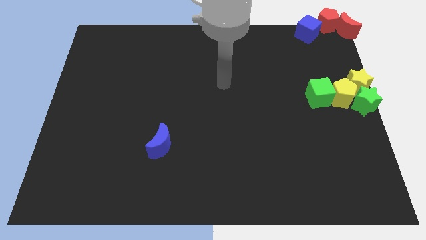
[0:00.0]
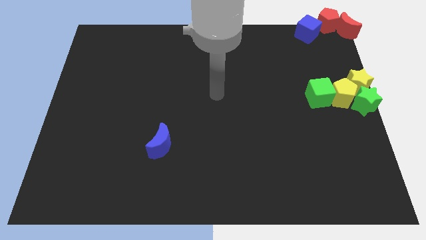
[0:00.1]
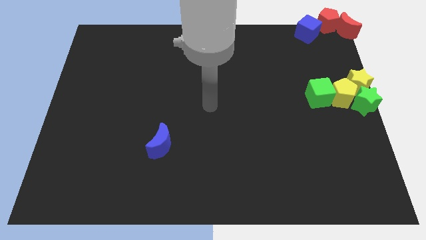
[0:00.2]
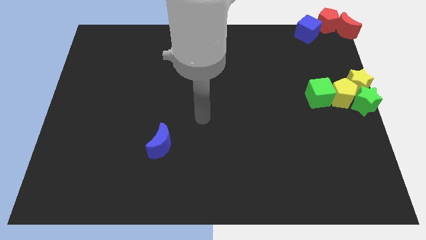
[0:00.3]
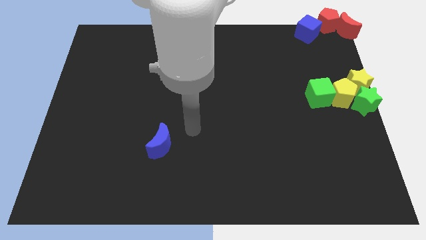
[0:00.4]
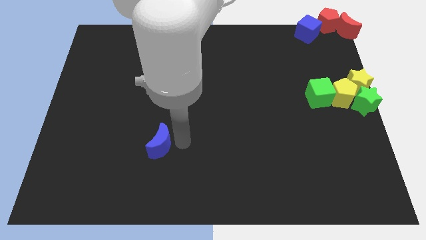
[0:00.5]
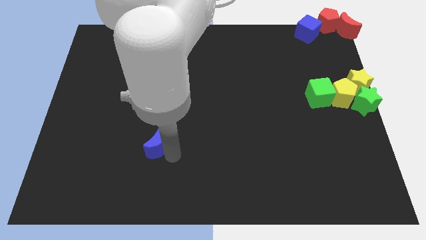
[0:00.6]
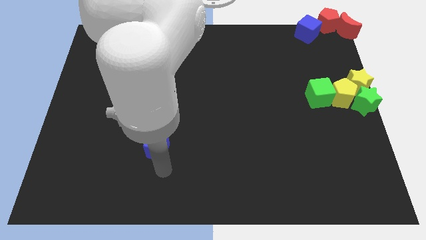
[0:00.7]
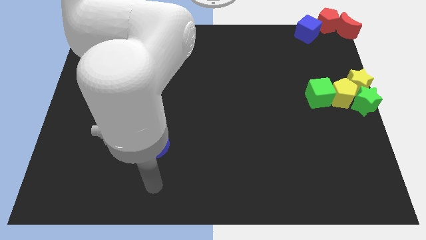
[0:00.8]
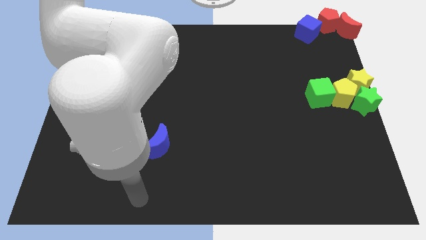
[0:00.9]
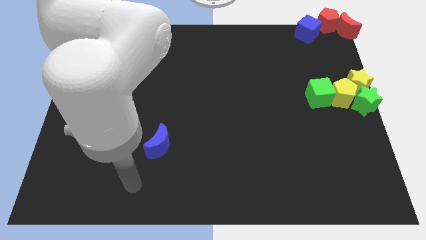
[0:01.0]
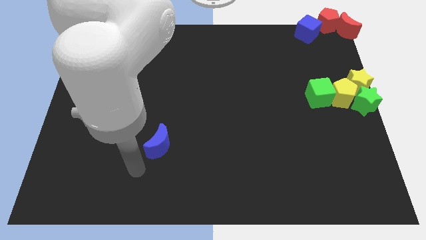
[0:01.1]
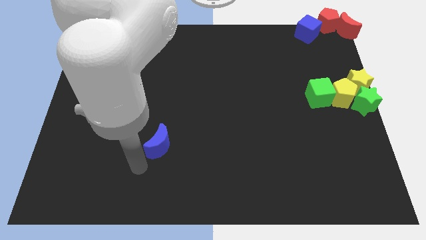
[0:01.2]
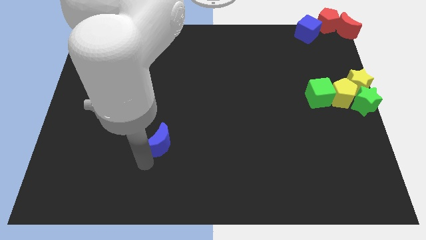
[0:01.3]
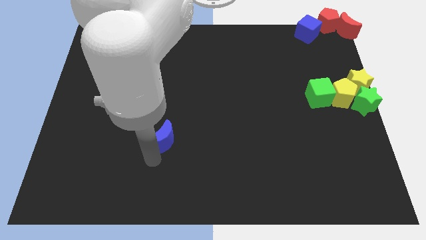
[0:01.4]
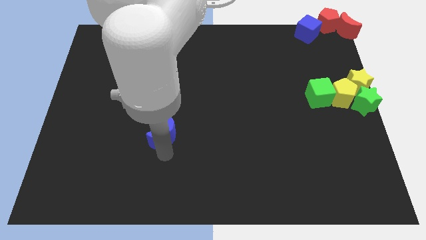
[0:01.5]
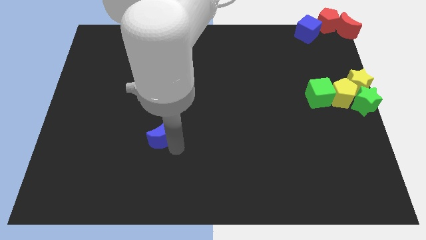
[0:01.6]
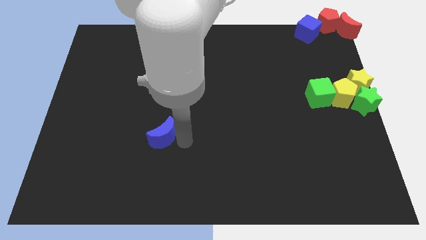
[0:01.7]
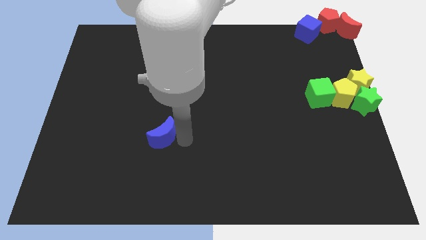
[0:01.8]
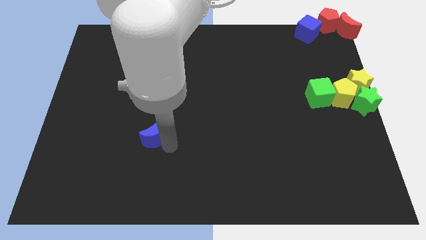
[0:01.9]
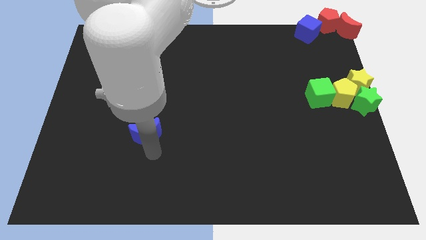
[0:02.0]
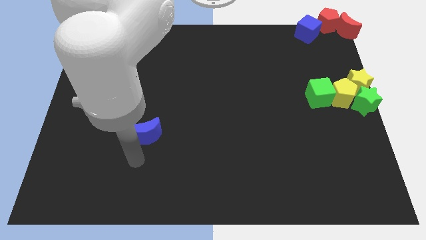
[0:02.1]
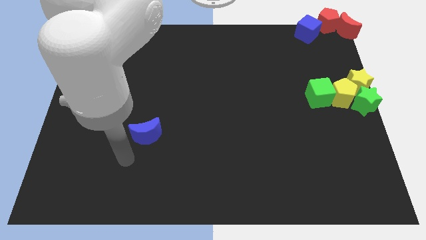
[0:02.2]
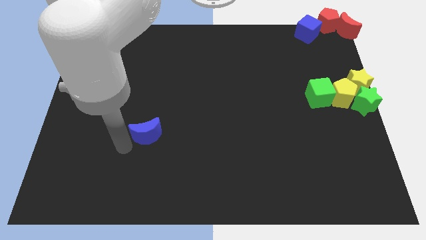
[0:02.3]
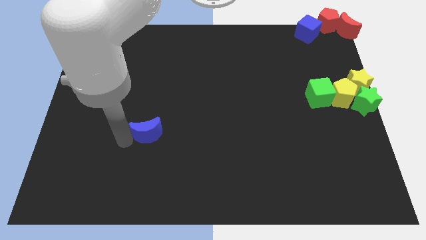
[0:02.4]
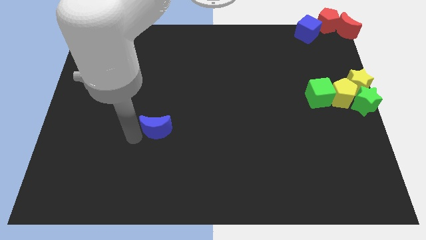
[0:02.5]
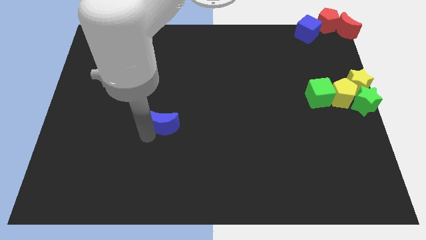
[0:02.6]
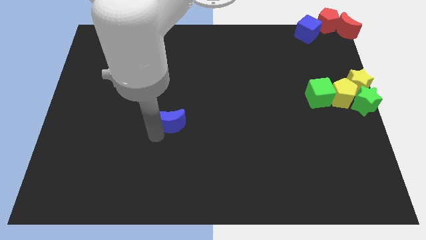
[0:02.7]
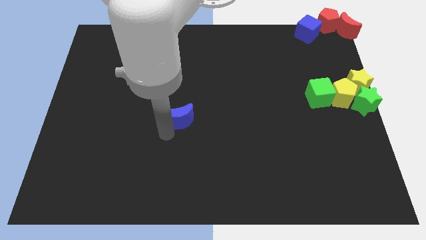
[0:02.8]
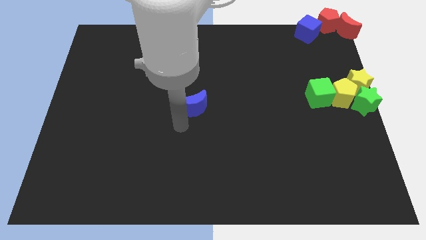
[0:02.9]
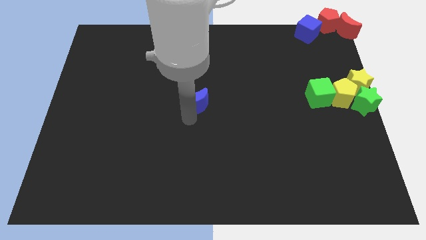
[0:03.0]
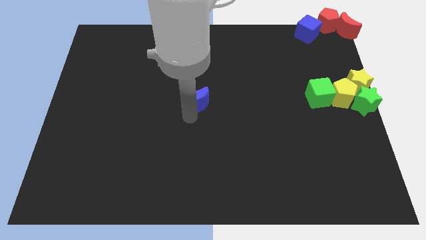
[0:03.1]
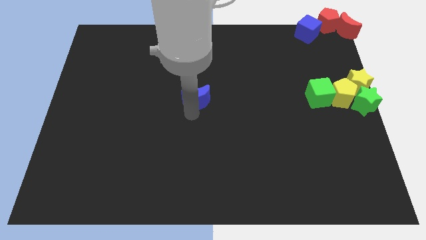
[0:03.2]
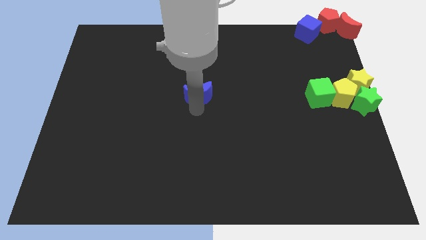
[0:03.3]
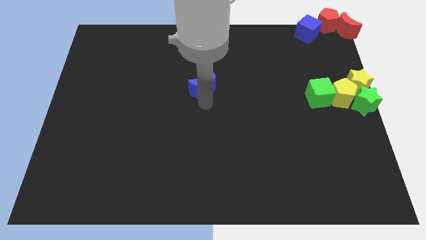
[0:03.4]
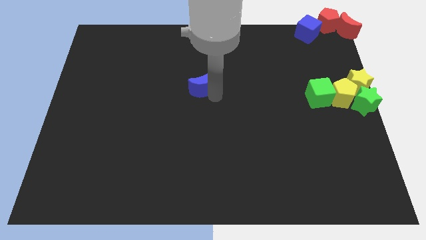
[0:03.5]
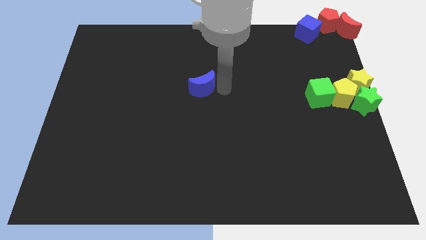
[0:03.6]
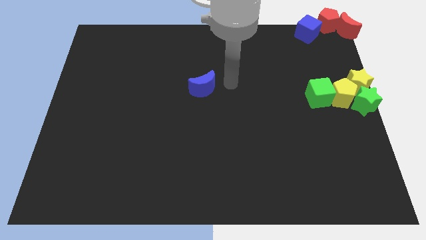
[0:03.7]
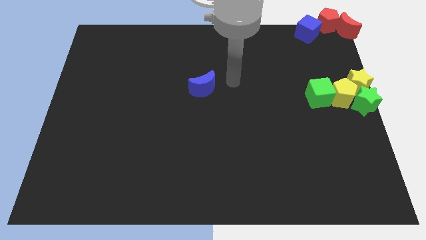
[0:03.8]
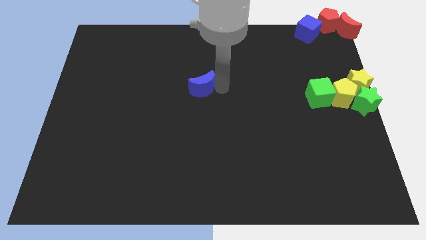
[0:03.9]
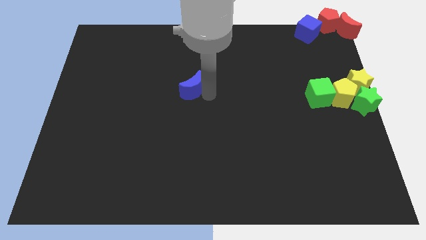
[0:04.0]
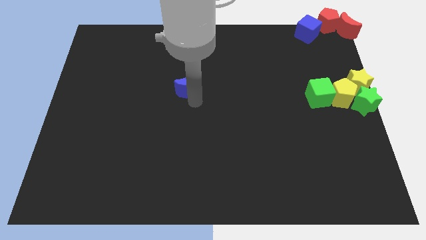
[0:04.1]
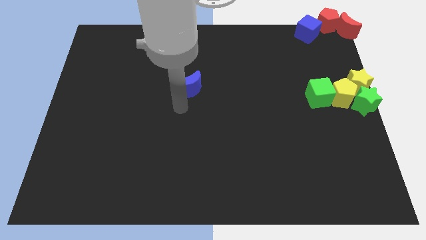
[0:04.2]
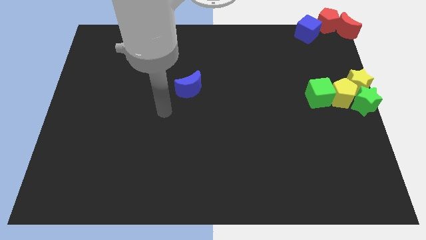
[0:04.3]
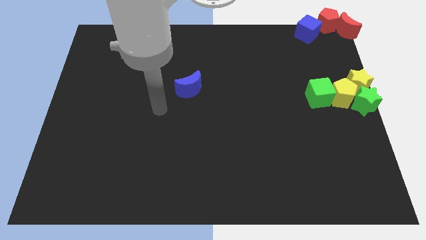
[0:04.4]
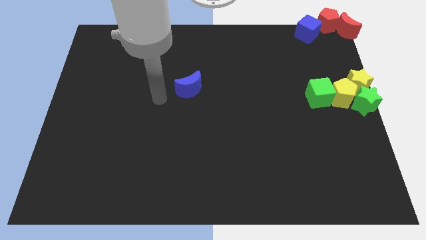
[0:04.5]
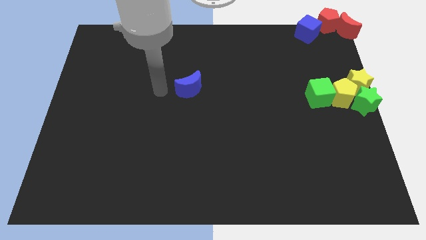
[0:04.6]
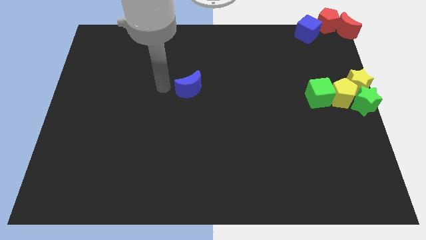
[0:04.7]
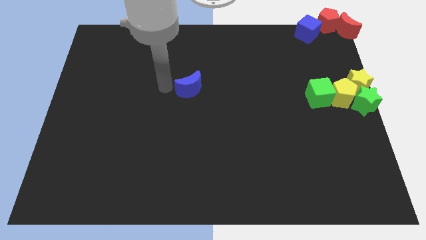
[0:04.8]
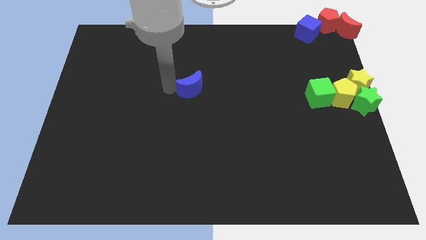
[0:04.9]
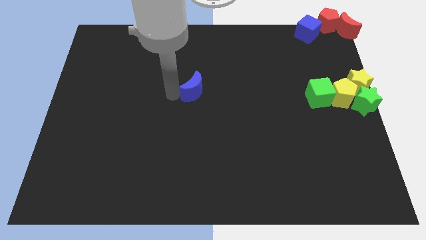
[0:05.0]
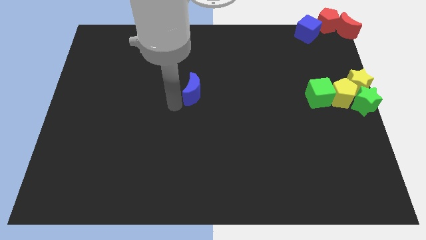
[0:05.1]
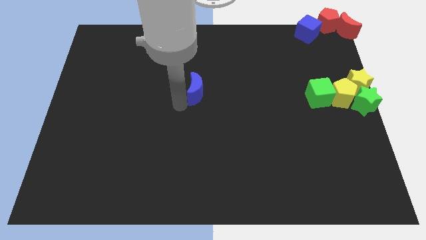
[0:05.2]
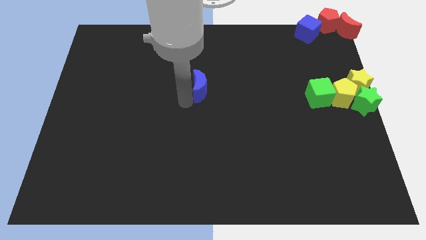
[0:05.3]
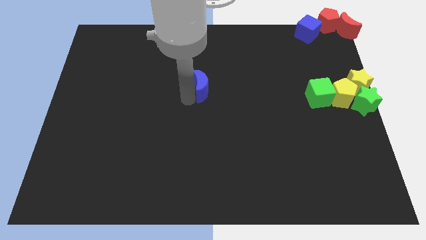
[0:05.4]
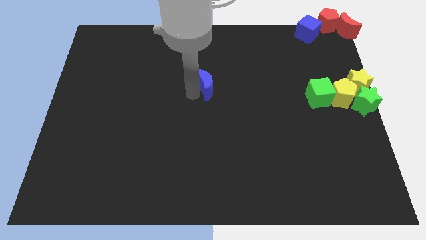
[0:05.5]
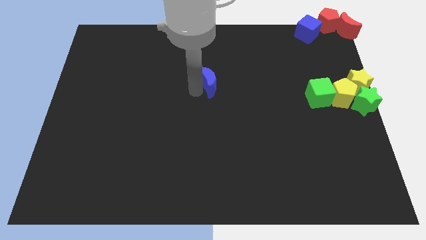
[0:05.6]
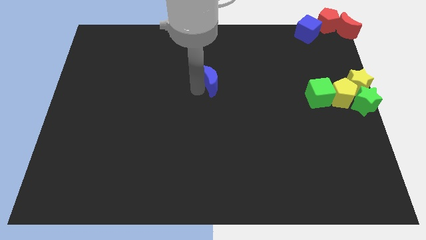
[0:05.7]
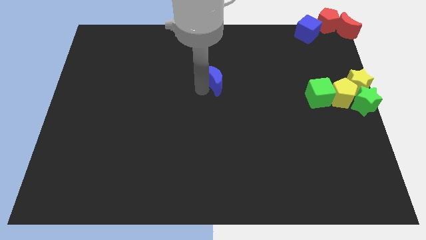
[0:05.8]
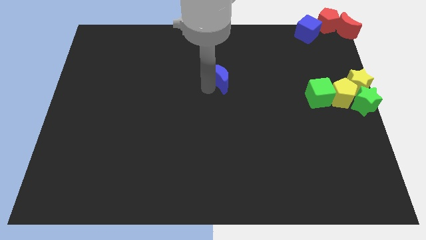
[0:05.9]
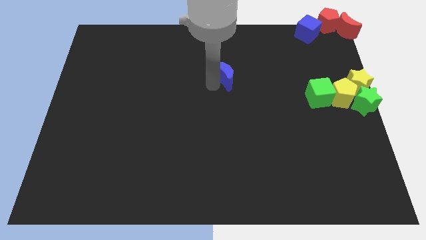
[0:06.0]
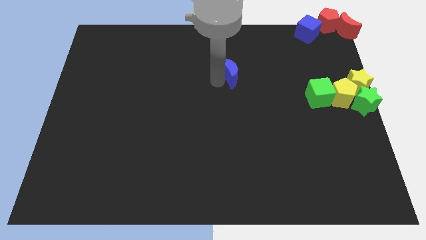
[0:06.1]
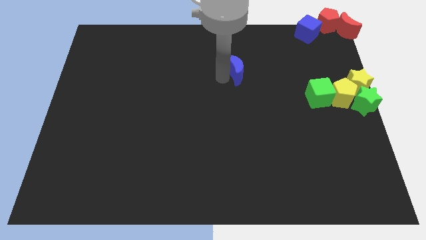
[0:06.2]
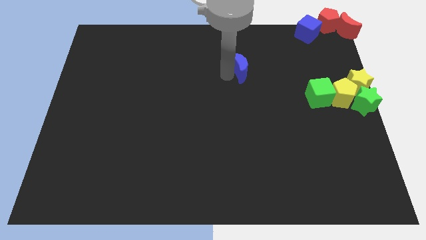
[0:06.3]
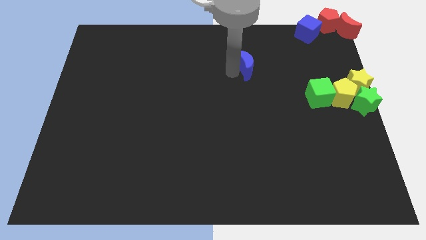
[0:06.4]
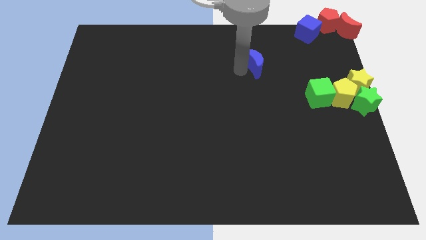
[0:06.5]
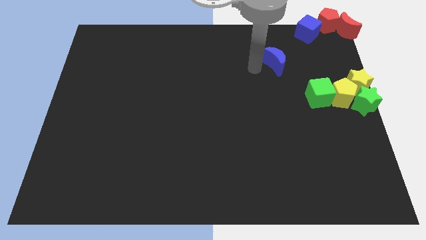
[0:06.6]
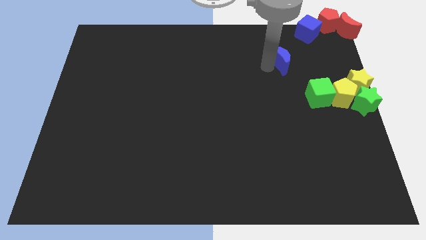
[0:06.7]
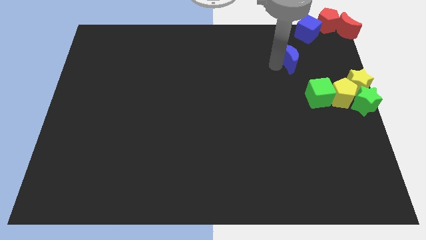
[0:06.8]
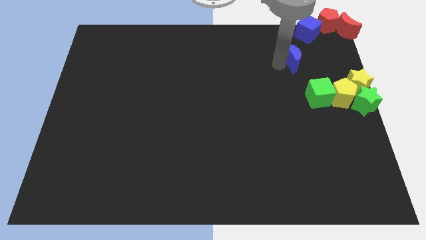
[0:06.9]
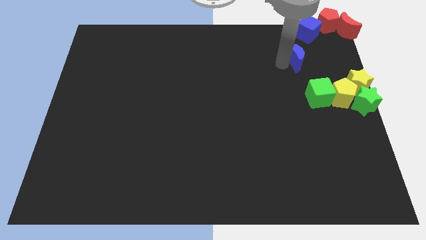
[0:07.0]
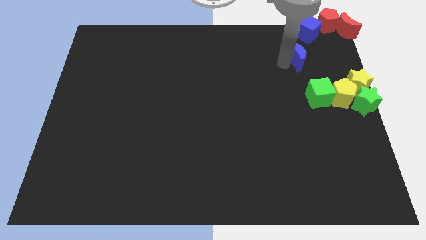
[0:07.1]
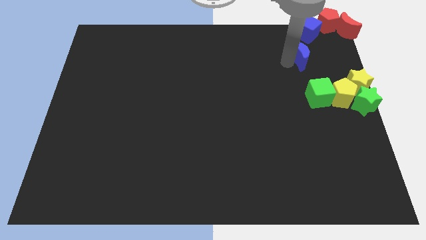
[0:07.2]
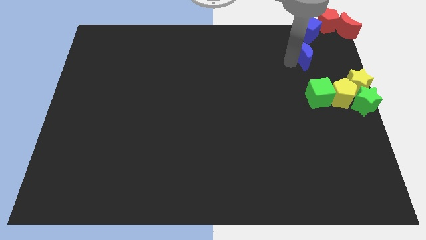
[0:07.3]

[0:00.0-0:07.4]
move the blue moon to the top right corner

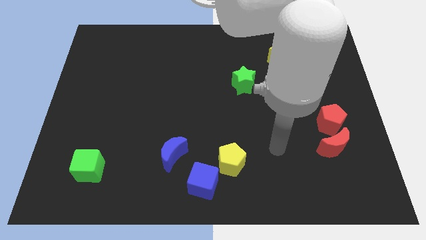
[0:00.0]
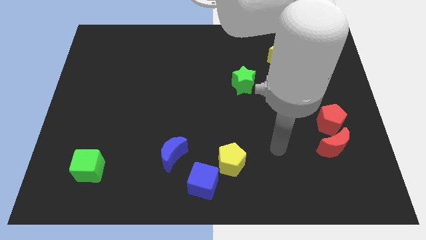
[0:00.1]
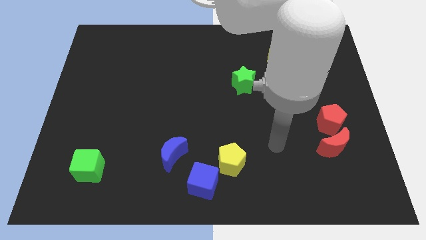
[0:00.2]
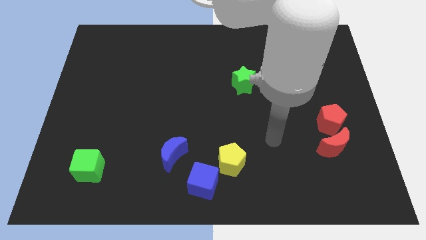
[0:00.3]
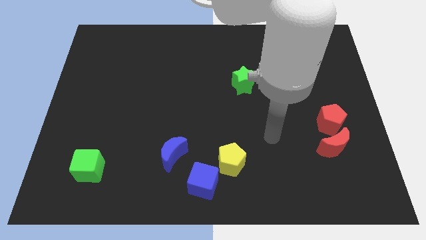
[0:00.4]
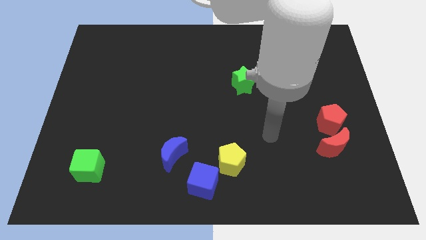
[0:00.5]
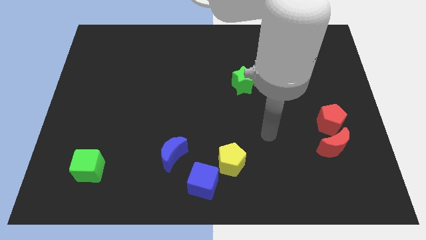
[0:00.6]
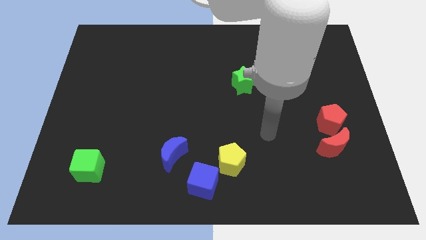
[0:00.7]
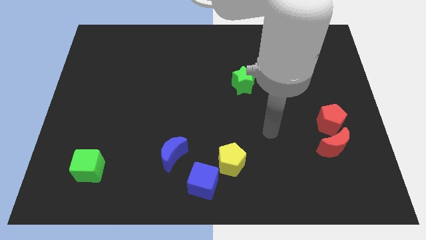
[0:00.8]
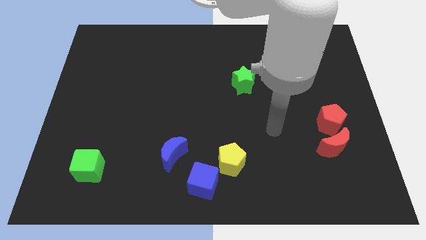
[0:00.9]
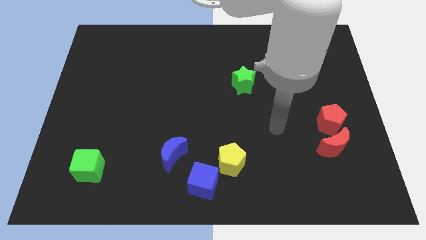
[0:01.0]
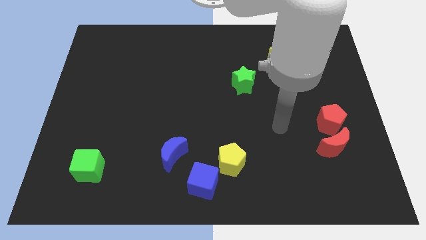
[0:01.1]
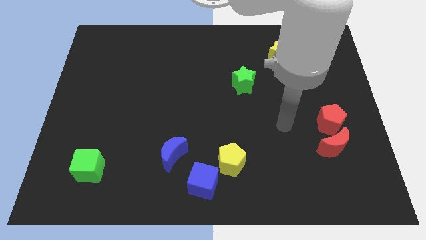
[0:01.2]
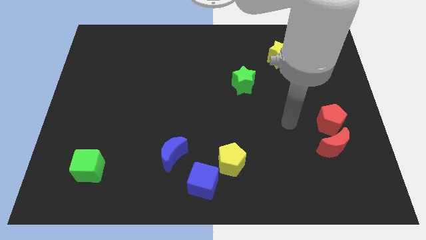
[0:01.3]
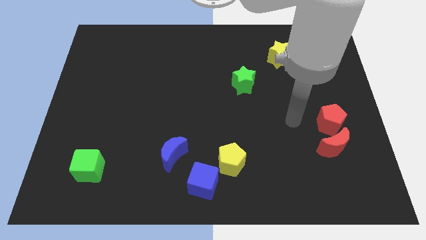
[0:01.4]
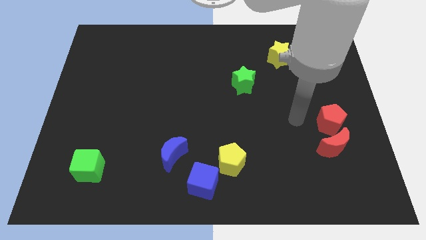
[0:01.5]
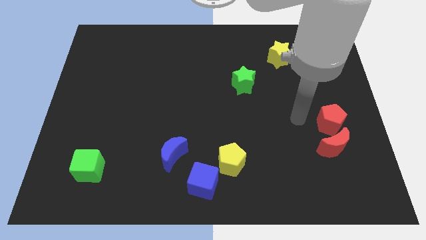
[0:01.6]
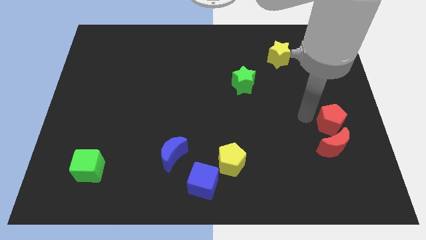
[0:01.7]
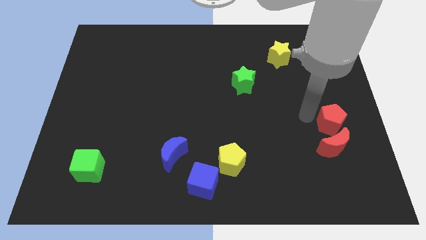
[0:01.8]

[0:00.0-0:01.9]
move yourself close to the red pentagon
